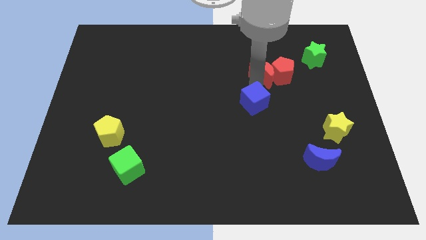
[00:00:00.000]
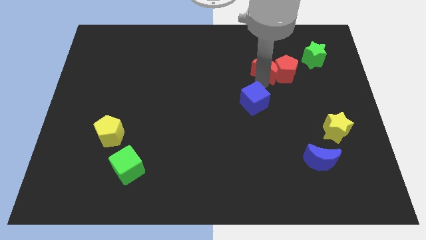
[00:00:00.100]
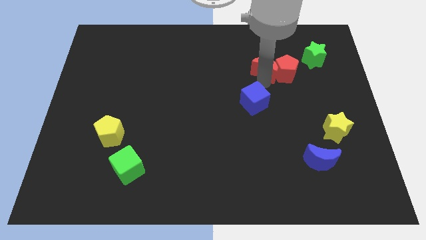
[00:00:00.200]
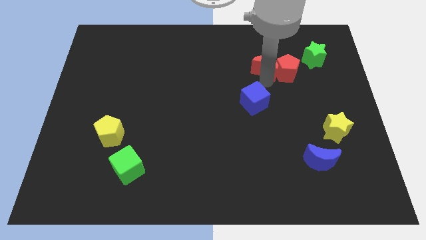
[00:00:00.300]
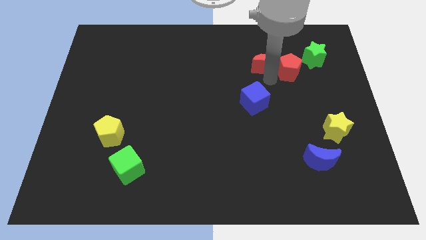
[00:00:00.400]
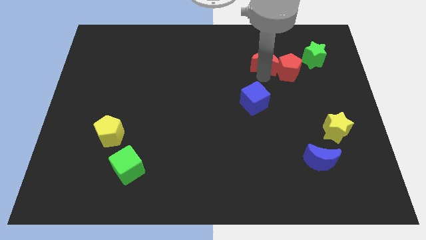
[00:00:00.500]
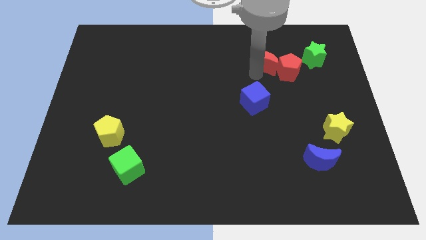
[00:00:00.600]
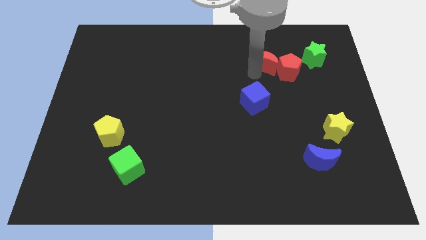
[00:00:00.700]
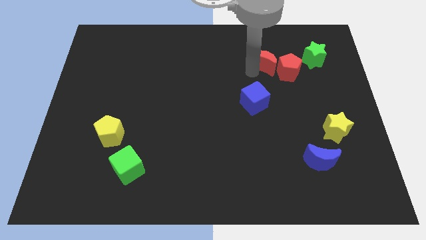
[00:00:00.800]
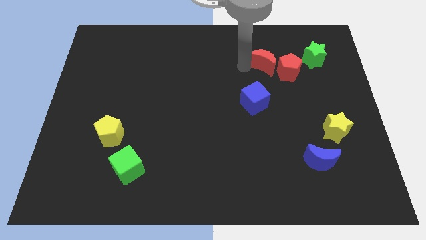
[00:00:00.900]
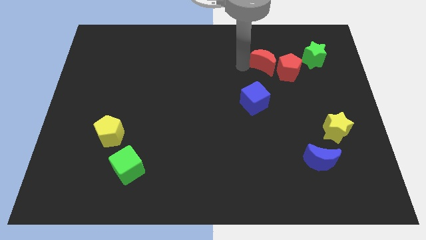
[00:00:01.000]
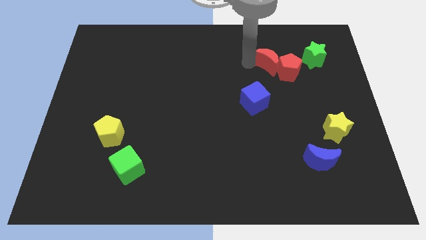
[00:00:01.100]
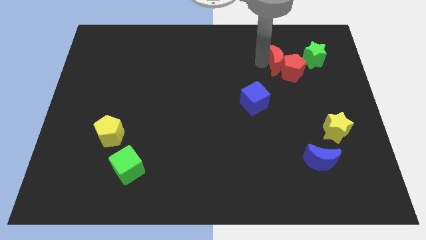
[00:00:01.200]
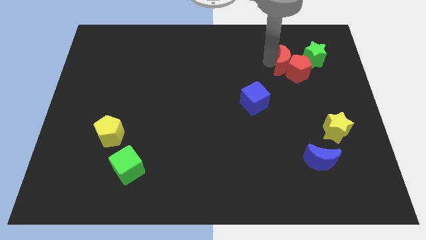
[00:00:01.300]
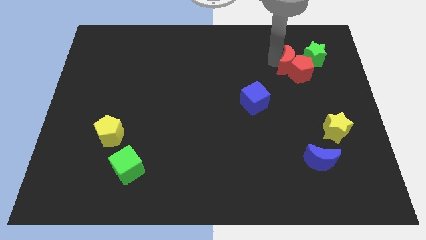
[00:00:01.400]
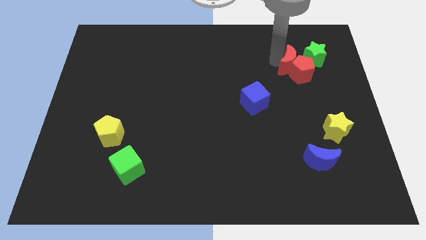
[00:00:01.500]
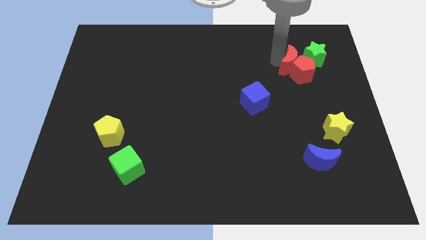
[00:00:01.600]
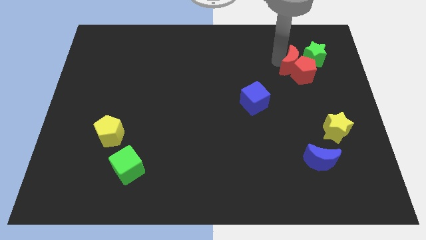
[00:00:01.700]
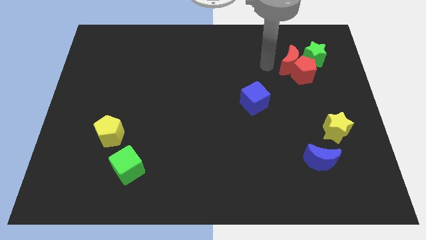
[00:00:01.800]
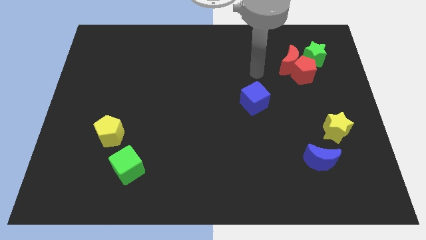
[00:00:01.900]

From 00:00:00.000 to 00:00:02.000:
push the red pentagon with the red crescent towards the right center of the board

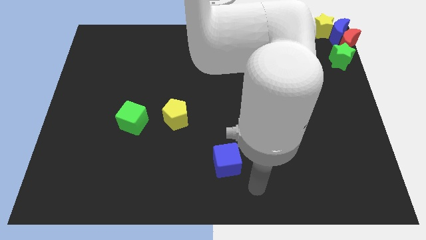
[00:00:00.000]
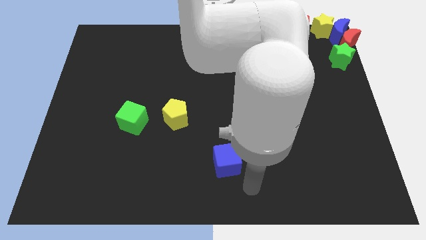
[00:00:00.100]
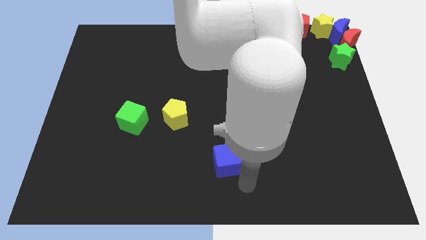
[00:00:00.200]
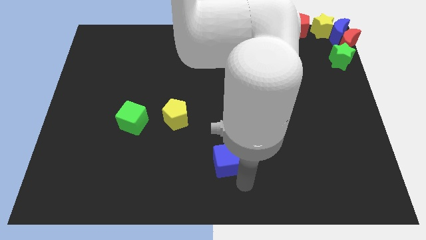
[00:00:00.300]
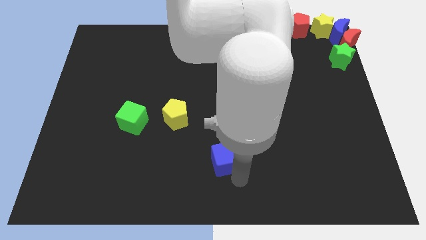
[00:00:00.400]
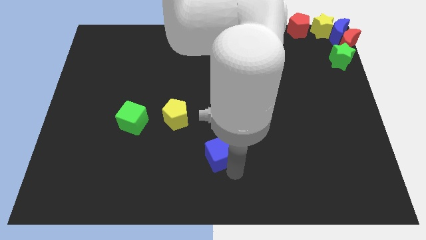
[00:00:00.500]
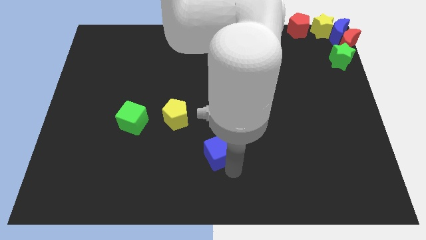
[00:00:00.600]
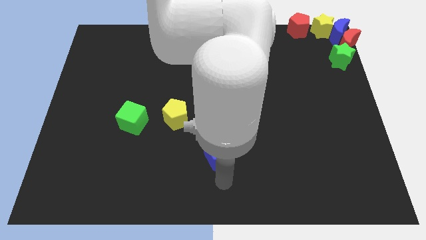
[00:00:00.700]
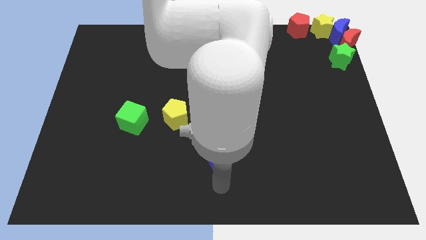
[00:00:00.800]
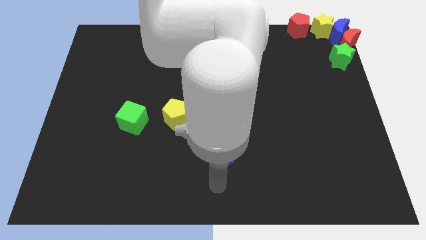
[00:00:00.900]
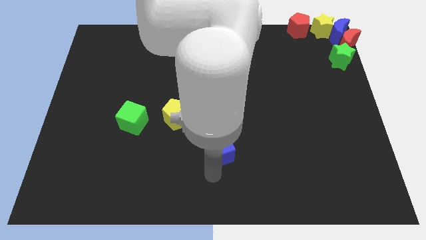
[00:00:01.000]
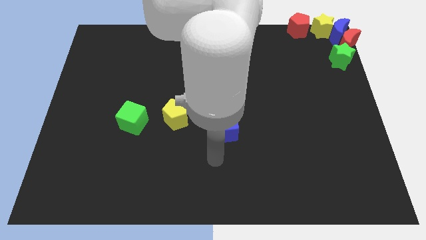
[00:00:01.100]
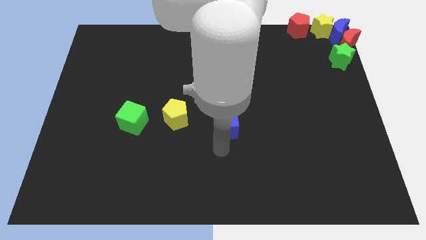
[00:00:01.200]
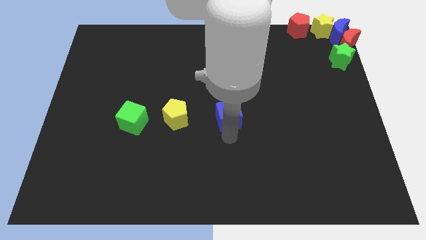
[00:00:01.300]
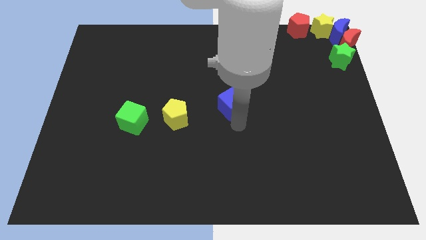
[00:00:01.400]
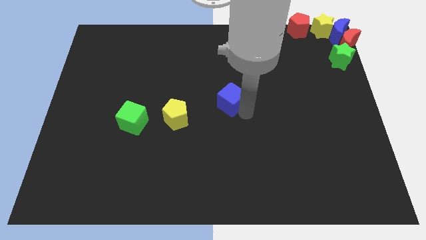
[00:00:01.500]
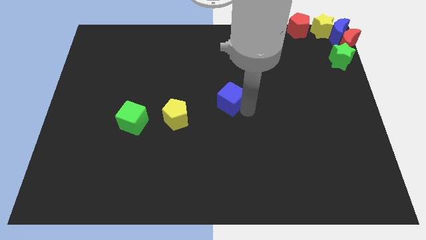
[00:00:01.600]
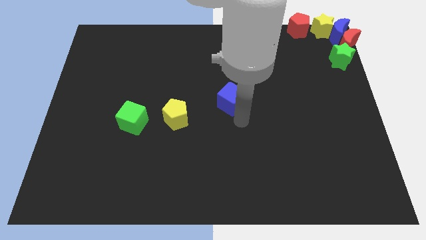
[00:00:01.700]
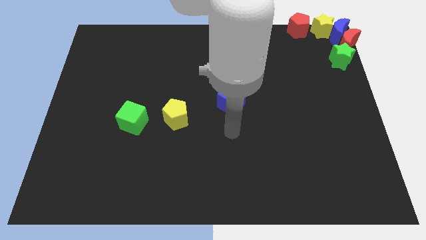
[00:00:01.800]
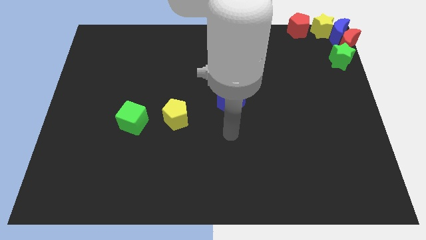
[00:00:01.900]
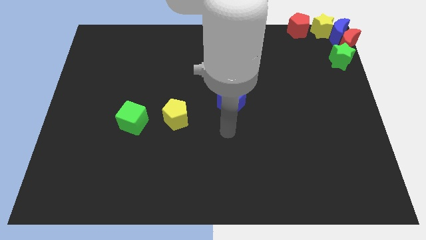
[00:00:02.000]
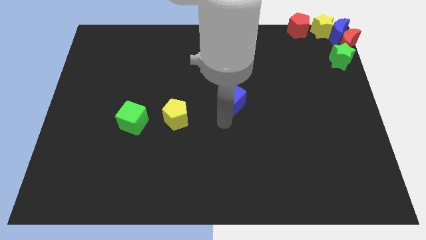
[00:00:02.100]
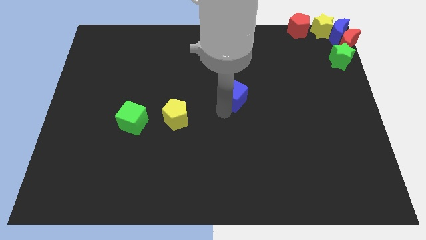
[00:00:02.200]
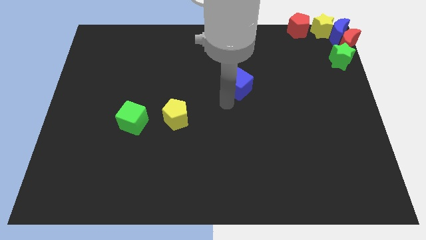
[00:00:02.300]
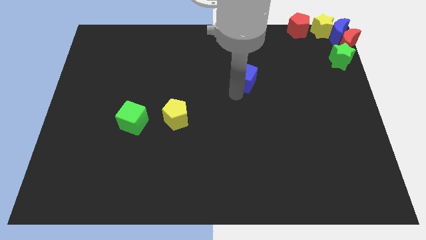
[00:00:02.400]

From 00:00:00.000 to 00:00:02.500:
move the blue cube to the center

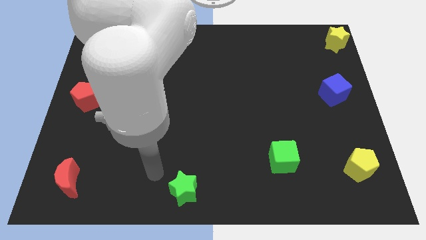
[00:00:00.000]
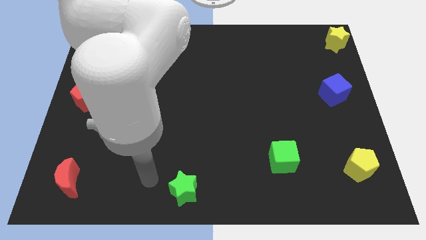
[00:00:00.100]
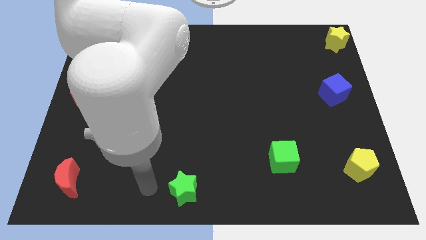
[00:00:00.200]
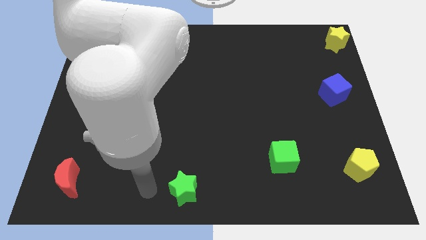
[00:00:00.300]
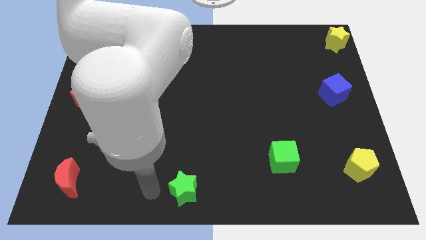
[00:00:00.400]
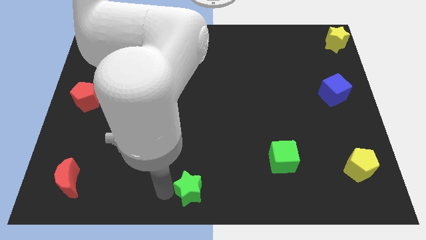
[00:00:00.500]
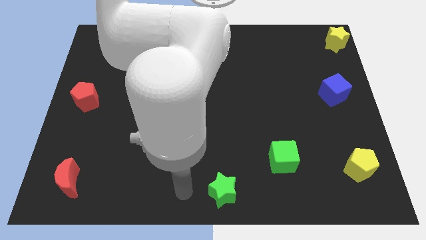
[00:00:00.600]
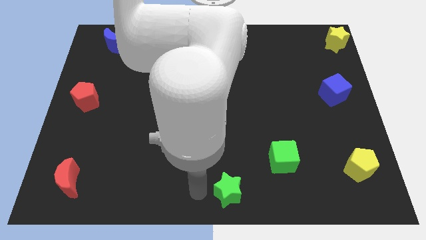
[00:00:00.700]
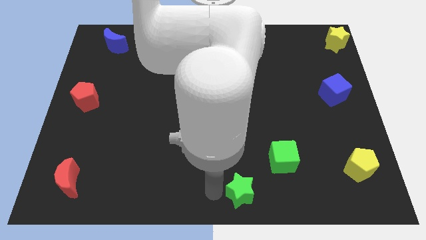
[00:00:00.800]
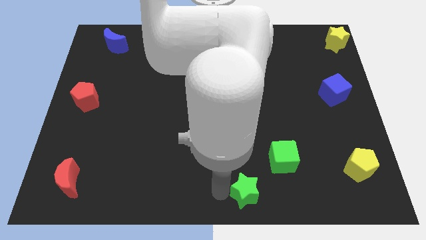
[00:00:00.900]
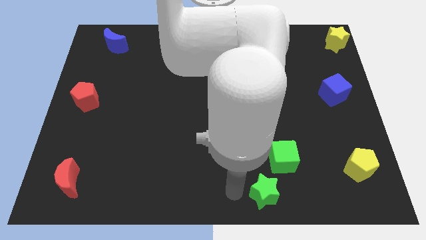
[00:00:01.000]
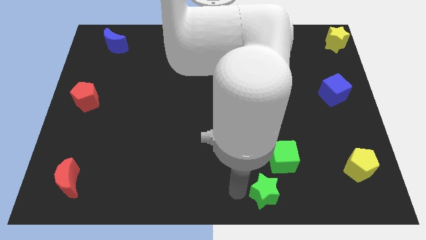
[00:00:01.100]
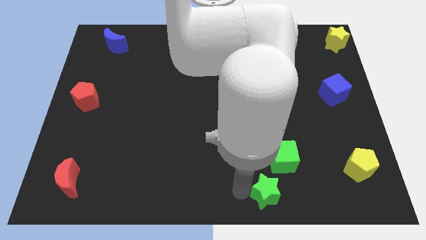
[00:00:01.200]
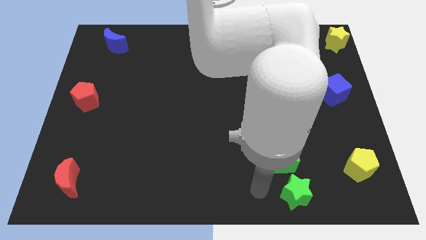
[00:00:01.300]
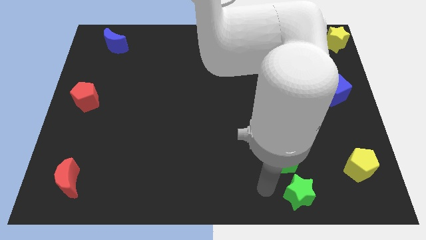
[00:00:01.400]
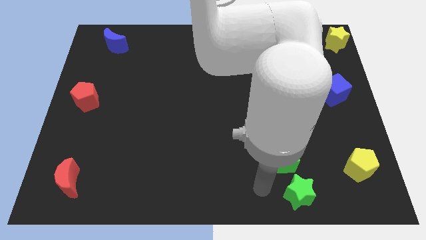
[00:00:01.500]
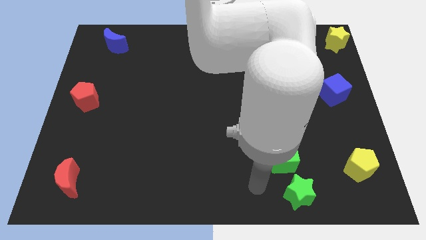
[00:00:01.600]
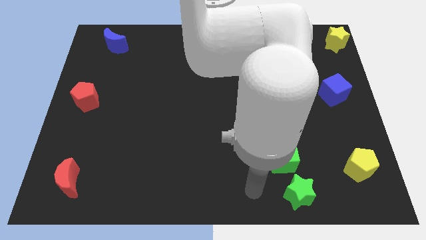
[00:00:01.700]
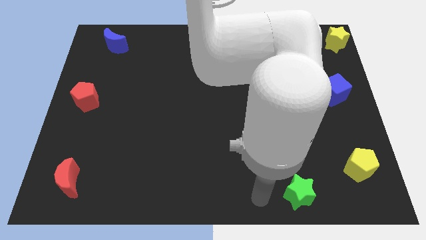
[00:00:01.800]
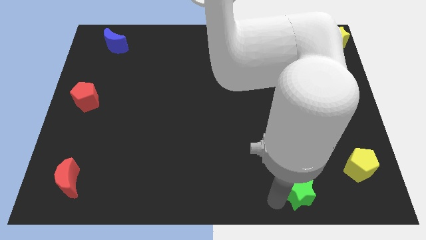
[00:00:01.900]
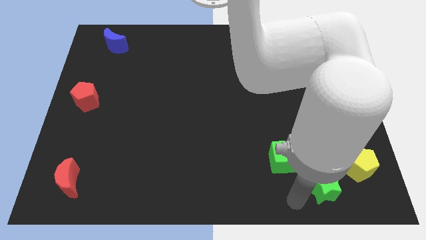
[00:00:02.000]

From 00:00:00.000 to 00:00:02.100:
slide the green star diagonally to the green cube

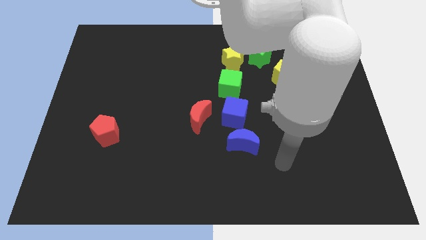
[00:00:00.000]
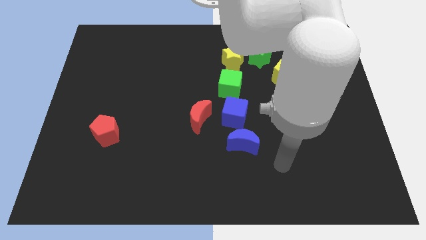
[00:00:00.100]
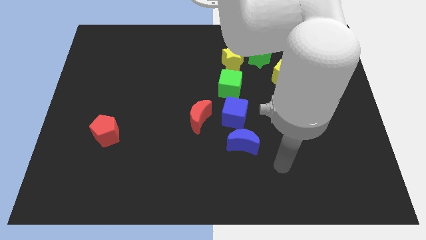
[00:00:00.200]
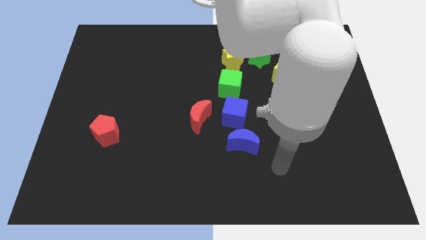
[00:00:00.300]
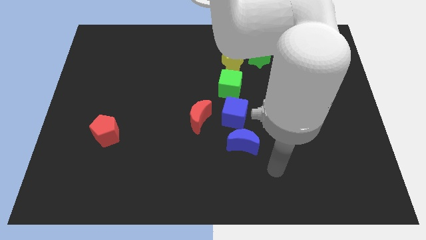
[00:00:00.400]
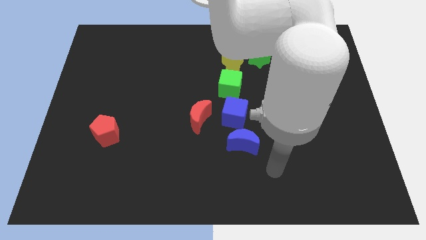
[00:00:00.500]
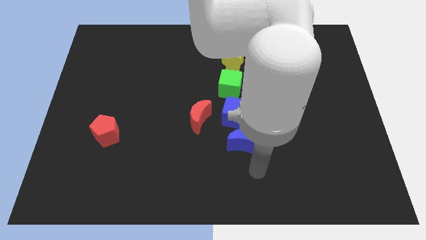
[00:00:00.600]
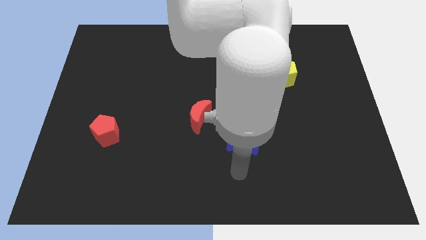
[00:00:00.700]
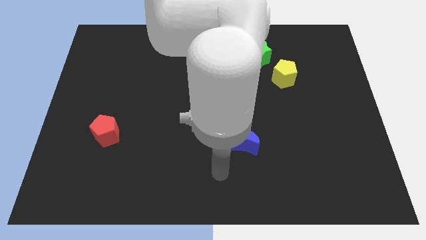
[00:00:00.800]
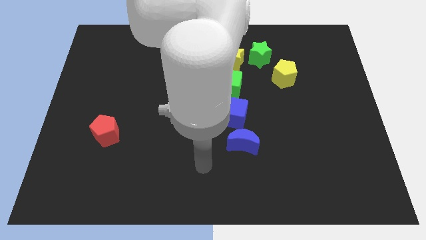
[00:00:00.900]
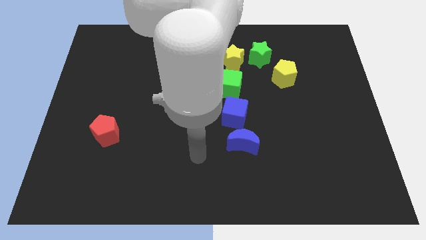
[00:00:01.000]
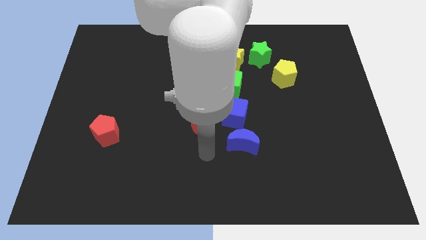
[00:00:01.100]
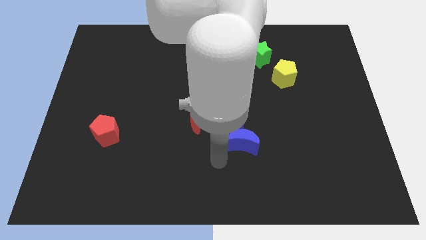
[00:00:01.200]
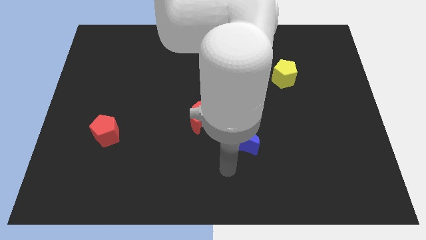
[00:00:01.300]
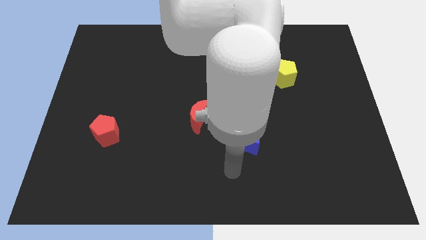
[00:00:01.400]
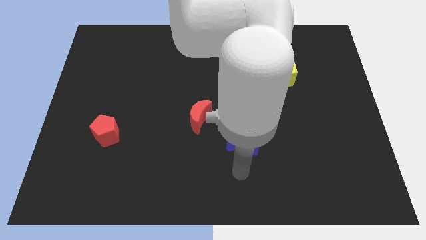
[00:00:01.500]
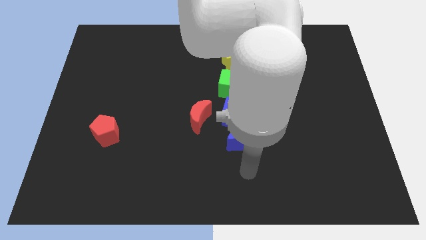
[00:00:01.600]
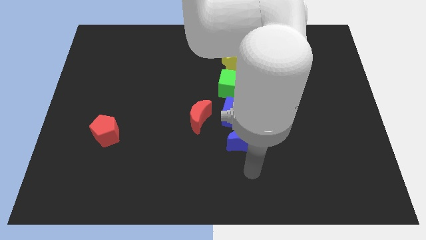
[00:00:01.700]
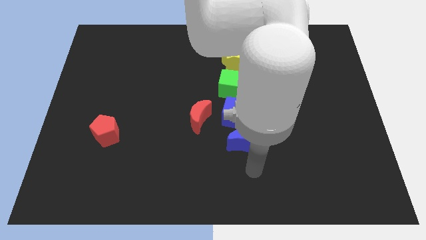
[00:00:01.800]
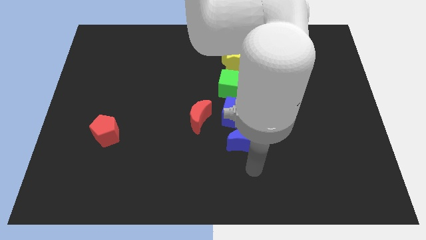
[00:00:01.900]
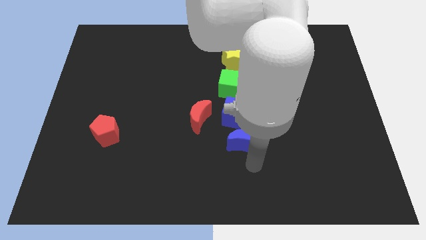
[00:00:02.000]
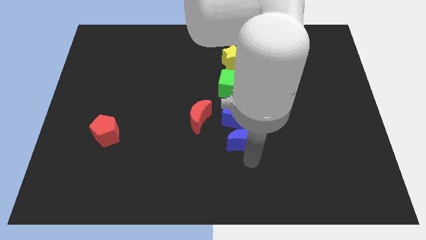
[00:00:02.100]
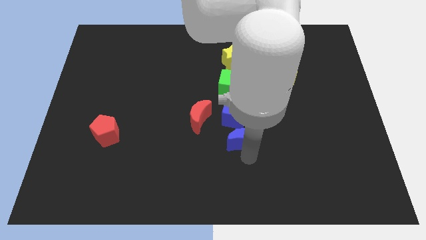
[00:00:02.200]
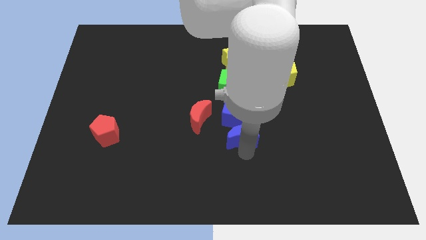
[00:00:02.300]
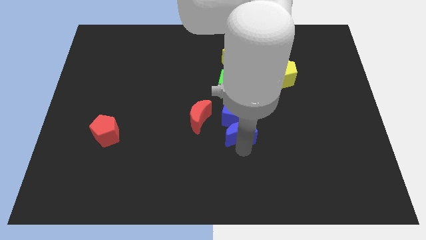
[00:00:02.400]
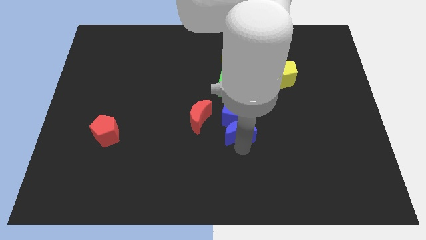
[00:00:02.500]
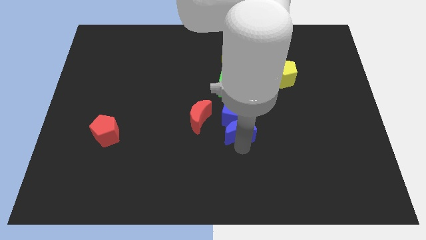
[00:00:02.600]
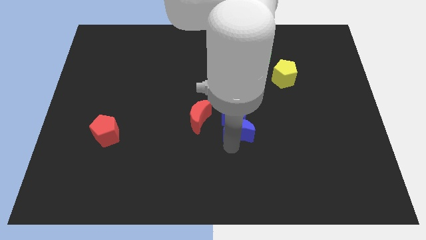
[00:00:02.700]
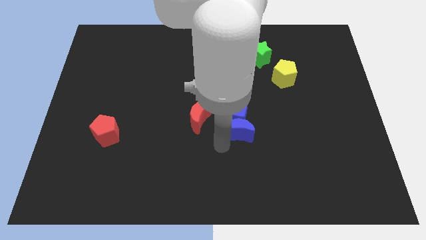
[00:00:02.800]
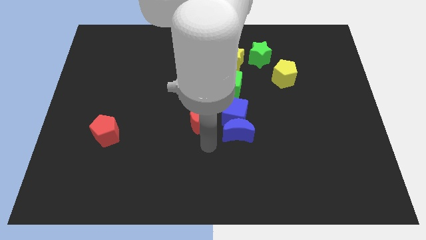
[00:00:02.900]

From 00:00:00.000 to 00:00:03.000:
push the blue crescent slightly to the top
